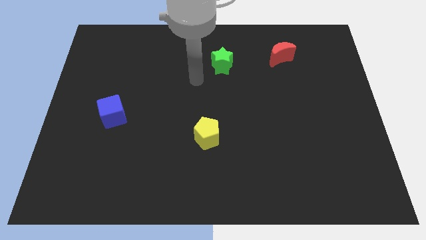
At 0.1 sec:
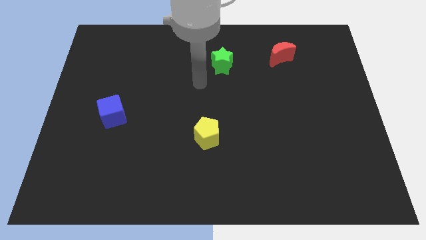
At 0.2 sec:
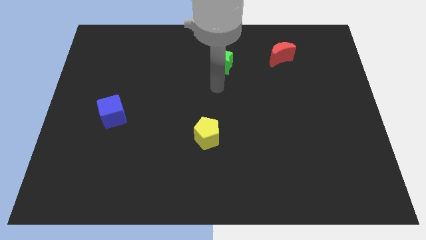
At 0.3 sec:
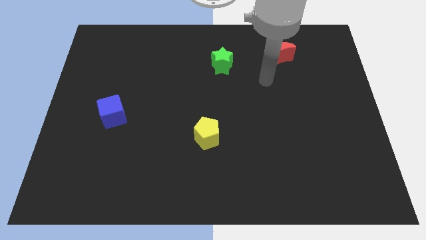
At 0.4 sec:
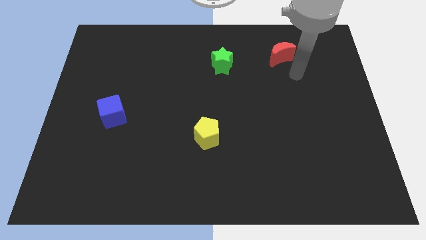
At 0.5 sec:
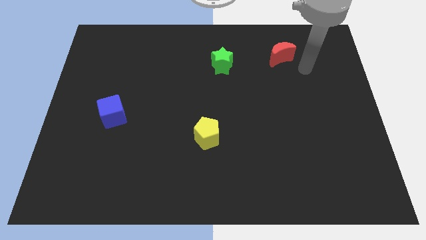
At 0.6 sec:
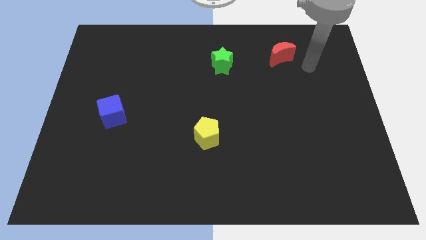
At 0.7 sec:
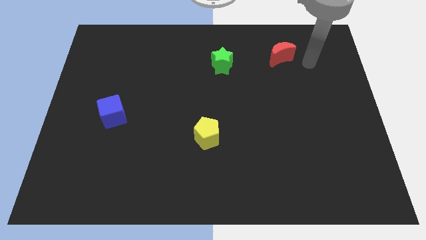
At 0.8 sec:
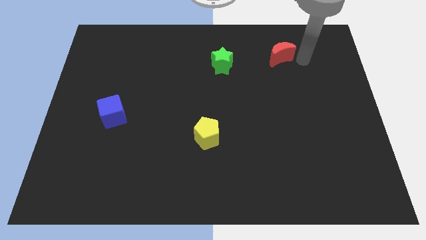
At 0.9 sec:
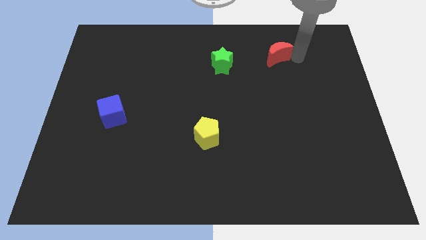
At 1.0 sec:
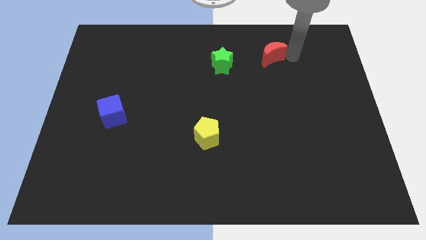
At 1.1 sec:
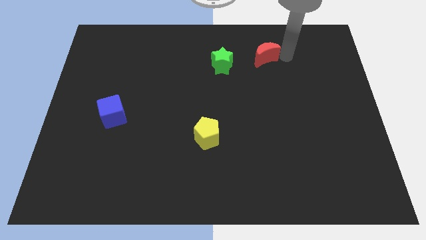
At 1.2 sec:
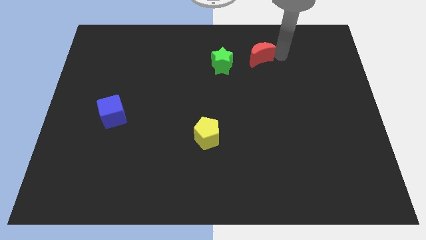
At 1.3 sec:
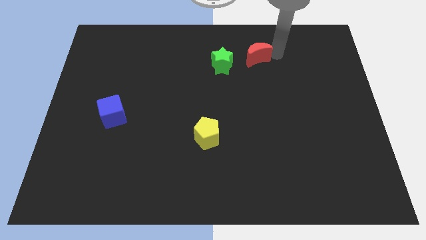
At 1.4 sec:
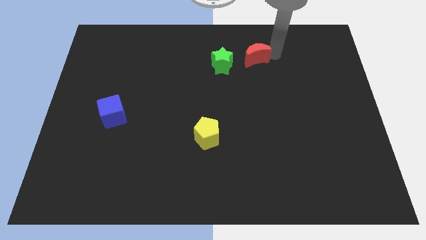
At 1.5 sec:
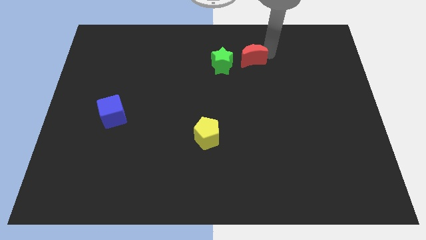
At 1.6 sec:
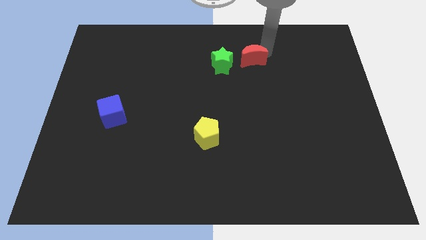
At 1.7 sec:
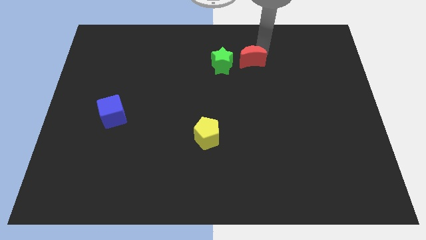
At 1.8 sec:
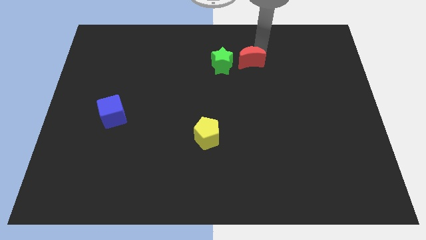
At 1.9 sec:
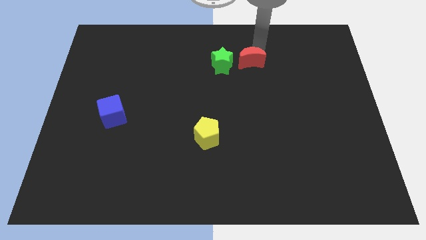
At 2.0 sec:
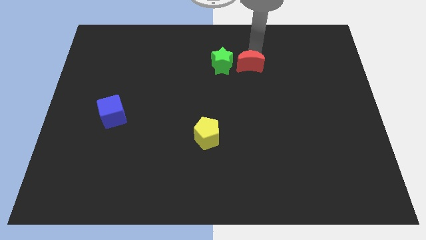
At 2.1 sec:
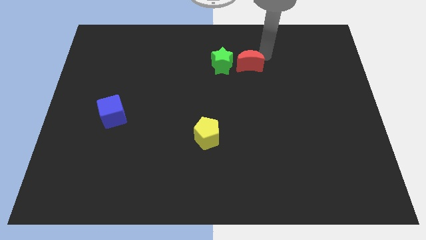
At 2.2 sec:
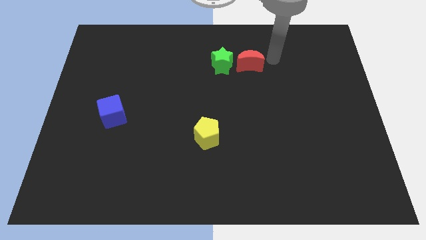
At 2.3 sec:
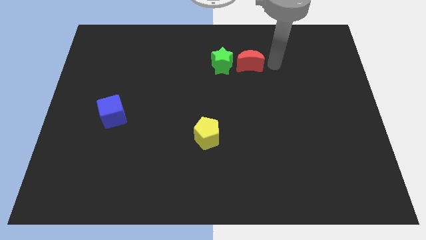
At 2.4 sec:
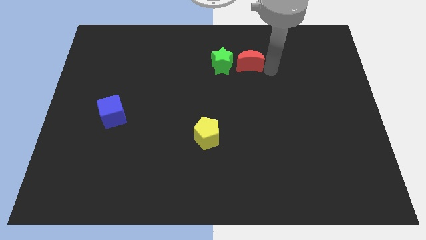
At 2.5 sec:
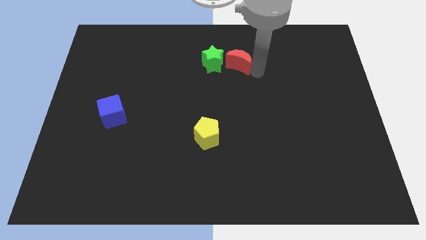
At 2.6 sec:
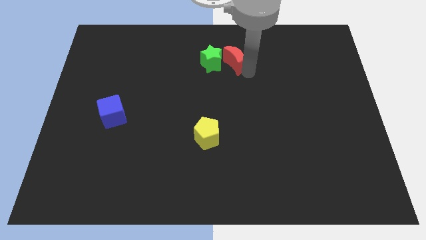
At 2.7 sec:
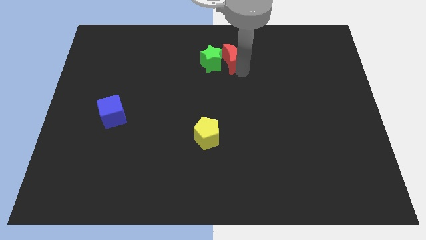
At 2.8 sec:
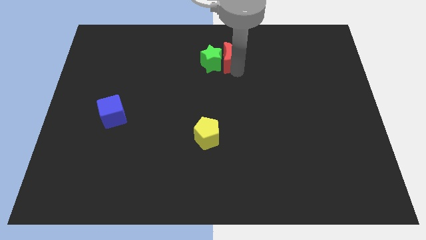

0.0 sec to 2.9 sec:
slide the red block close to the star

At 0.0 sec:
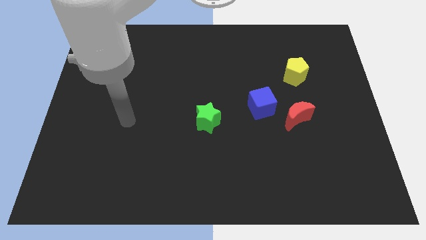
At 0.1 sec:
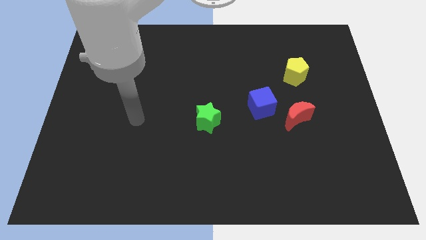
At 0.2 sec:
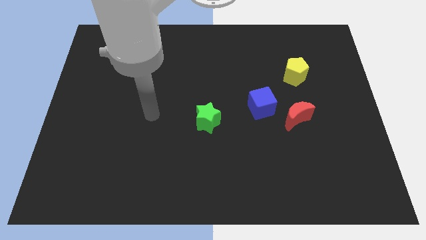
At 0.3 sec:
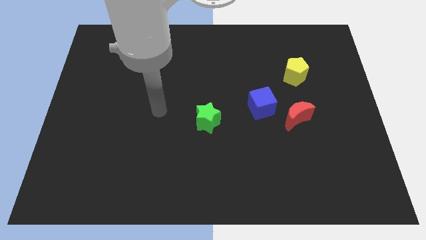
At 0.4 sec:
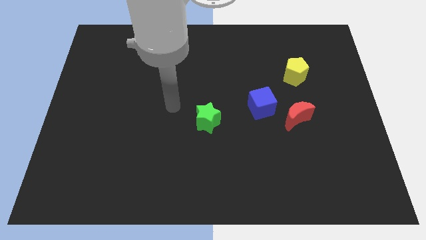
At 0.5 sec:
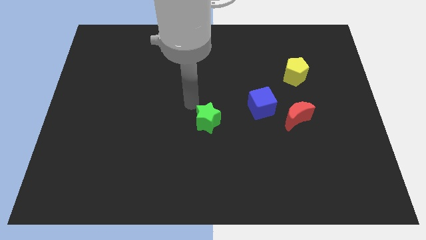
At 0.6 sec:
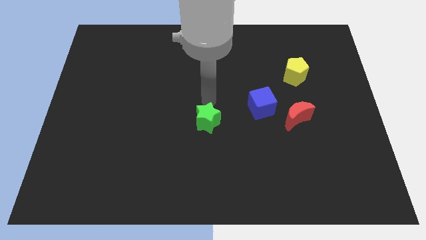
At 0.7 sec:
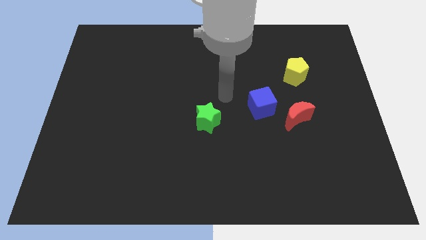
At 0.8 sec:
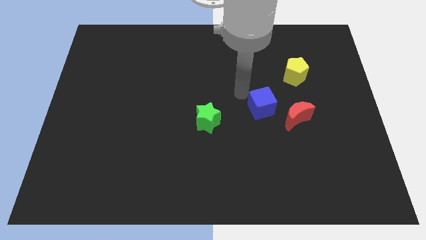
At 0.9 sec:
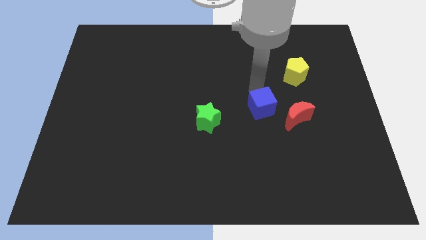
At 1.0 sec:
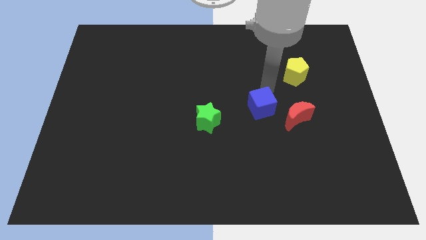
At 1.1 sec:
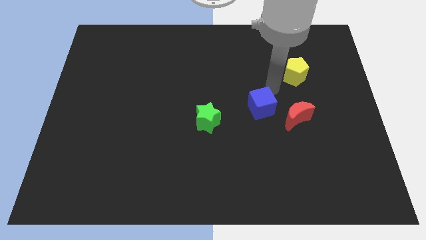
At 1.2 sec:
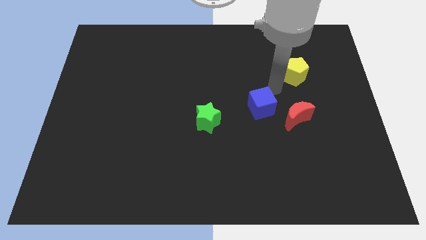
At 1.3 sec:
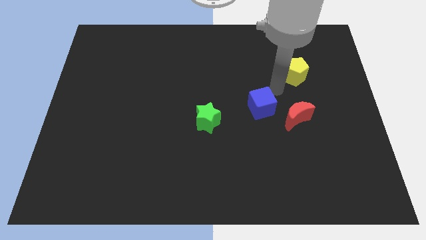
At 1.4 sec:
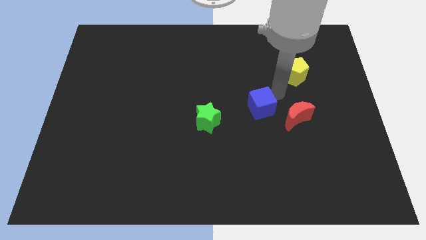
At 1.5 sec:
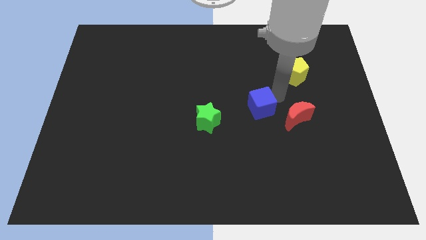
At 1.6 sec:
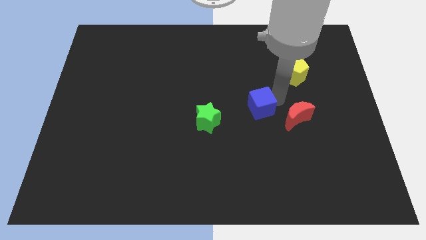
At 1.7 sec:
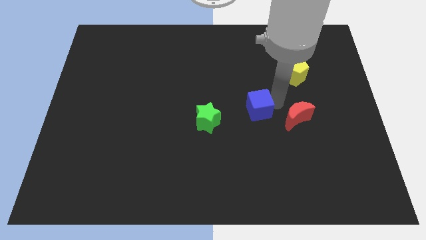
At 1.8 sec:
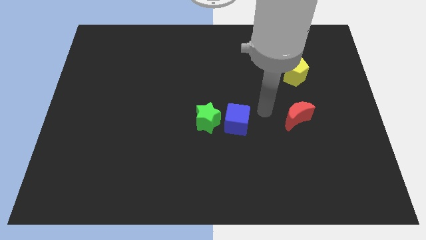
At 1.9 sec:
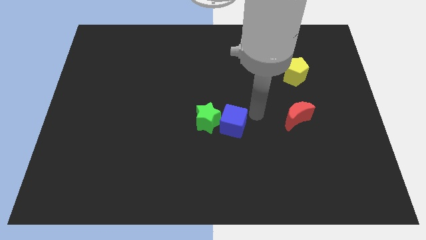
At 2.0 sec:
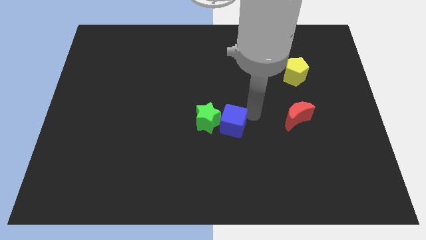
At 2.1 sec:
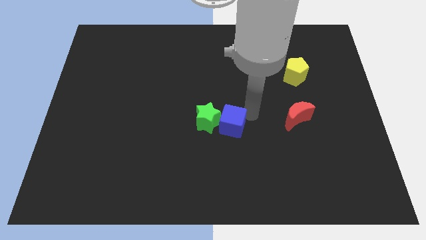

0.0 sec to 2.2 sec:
move the blue block towards the star

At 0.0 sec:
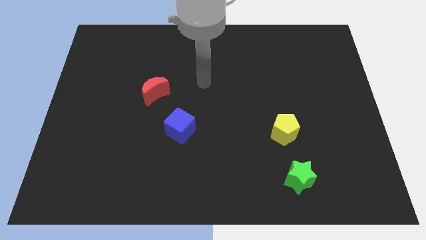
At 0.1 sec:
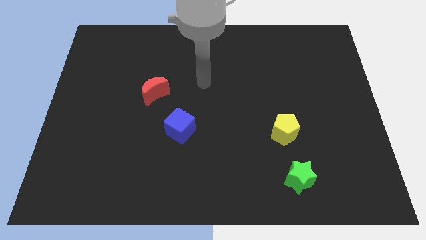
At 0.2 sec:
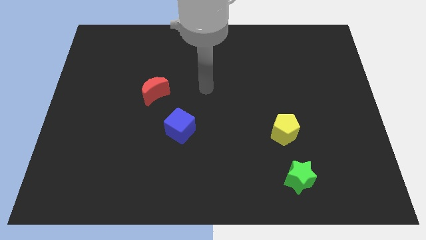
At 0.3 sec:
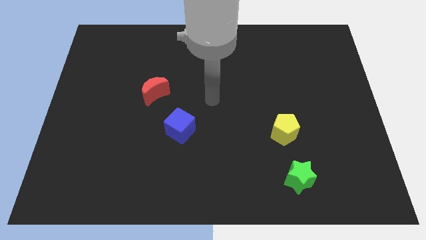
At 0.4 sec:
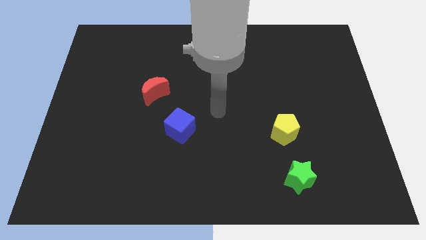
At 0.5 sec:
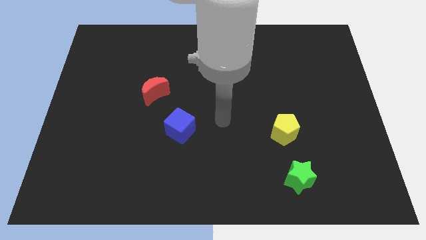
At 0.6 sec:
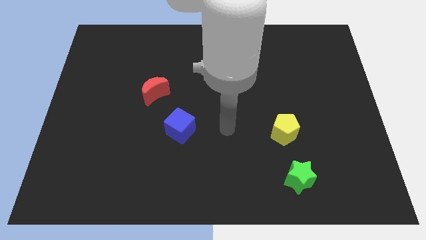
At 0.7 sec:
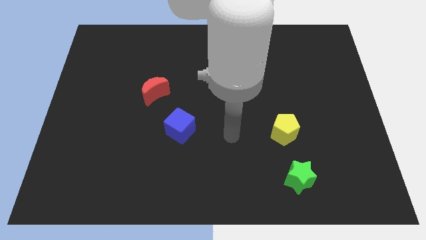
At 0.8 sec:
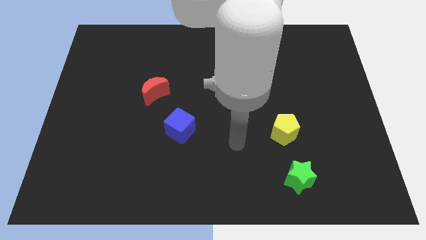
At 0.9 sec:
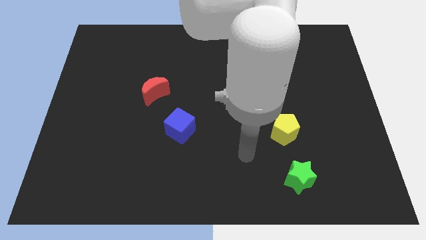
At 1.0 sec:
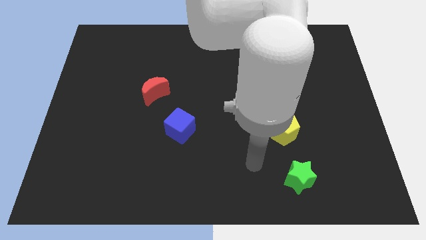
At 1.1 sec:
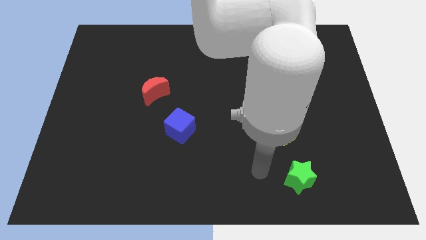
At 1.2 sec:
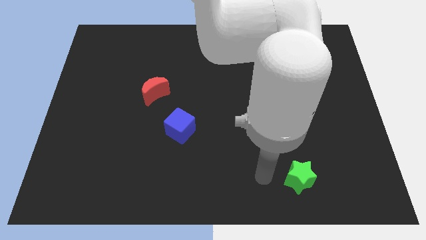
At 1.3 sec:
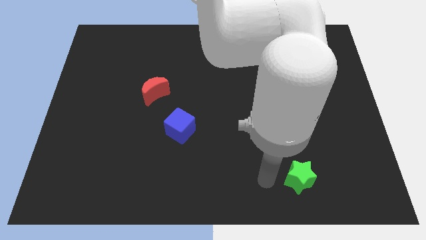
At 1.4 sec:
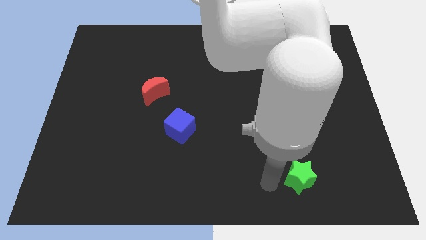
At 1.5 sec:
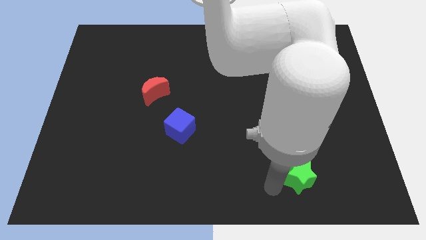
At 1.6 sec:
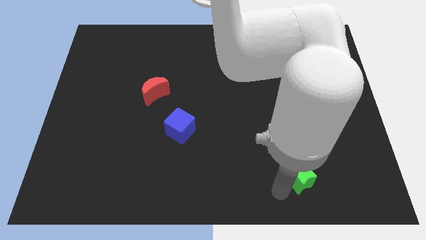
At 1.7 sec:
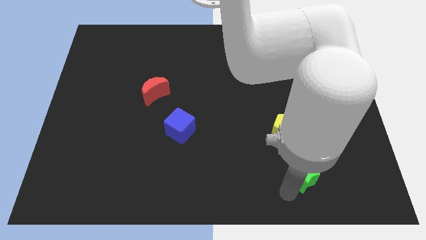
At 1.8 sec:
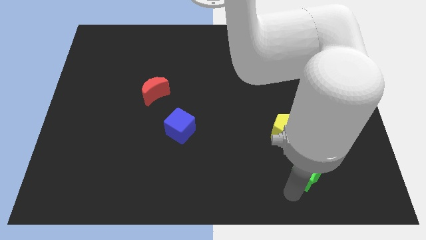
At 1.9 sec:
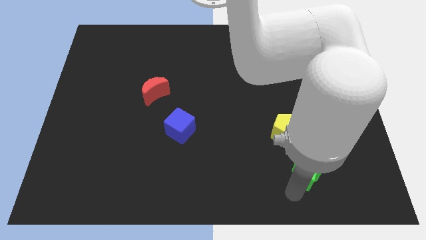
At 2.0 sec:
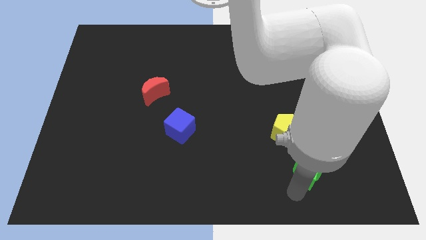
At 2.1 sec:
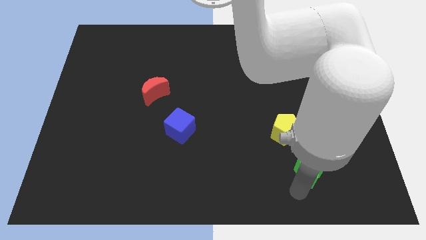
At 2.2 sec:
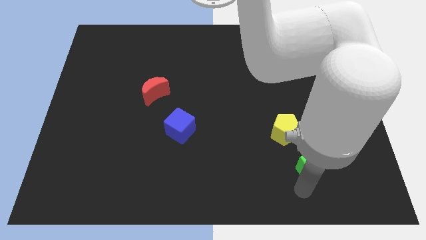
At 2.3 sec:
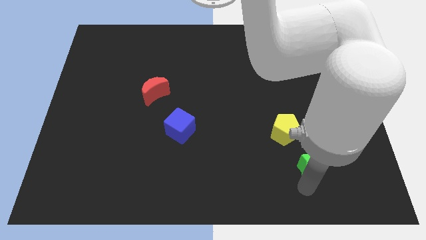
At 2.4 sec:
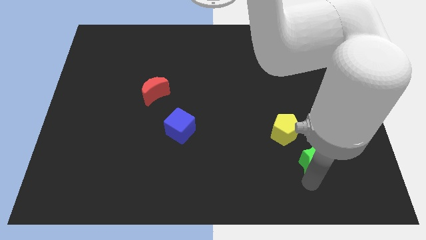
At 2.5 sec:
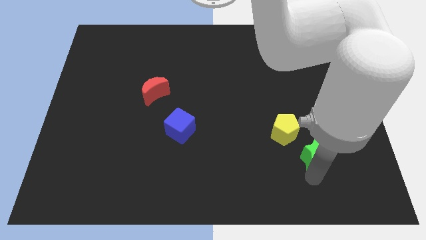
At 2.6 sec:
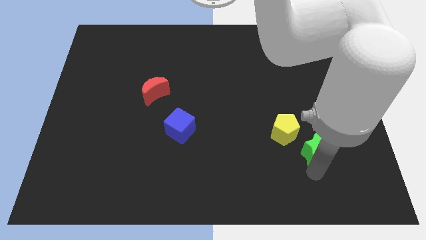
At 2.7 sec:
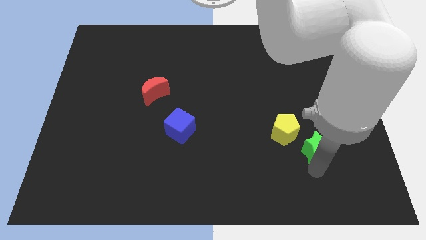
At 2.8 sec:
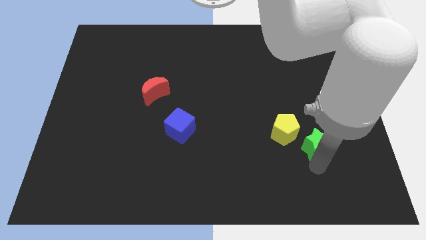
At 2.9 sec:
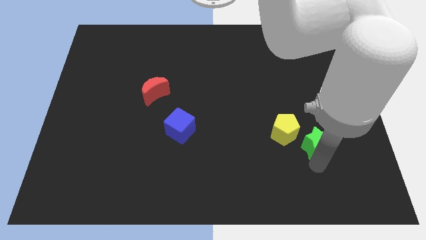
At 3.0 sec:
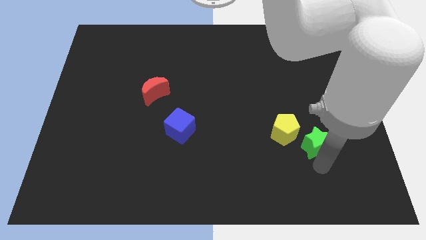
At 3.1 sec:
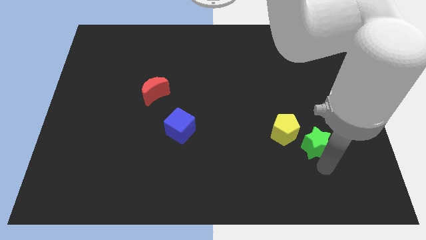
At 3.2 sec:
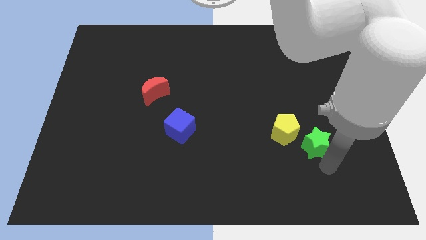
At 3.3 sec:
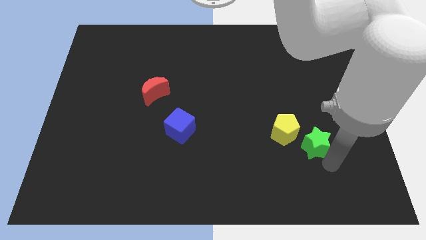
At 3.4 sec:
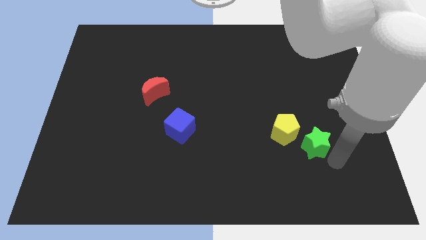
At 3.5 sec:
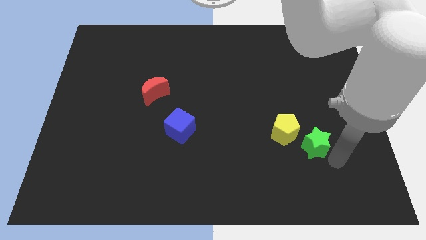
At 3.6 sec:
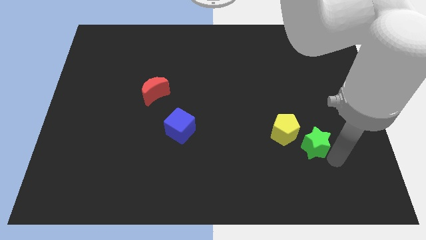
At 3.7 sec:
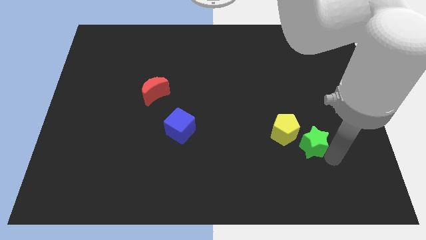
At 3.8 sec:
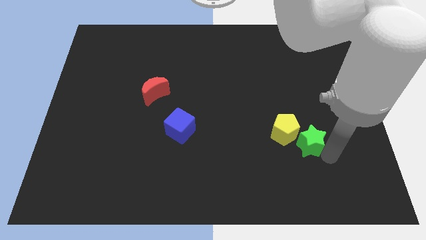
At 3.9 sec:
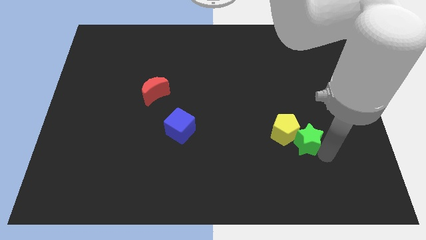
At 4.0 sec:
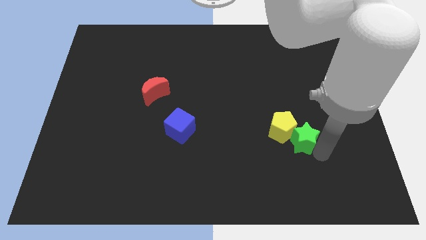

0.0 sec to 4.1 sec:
slide the green block close to the yellow block
